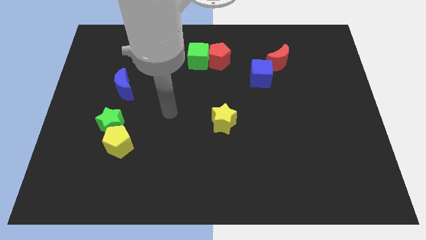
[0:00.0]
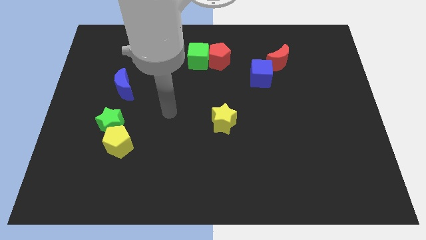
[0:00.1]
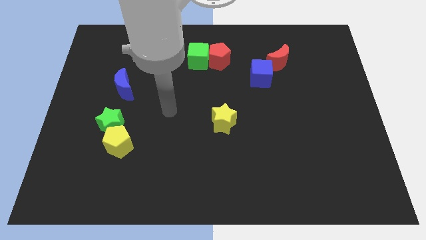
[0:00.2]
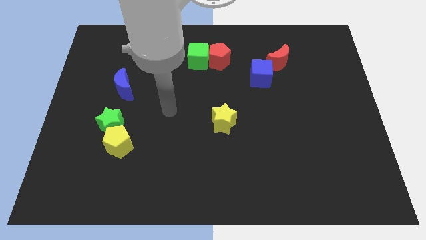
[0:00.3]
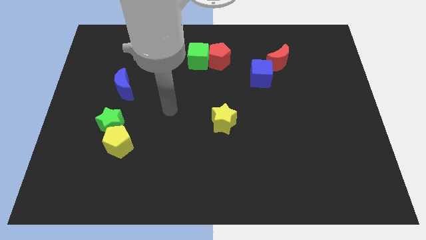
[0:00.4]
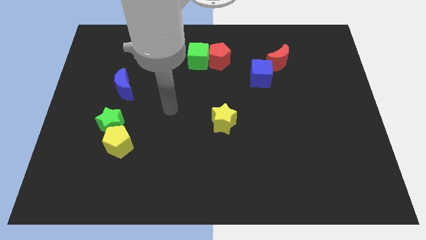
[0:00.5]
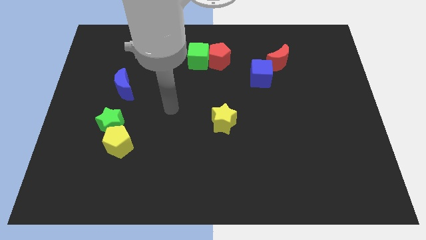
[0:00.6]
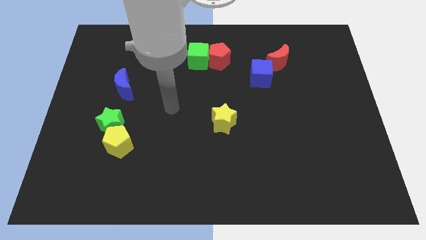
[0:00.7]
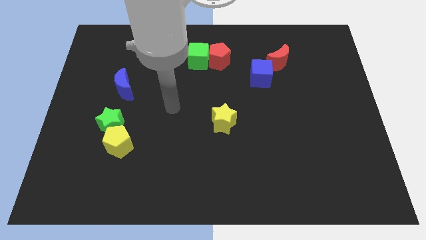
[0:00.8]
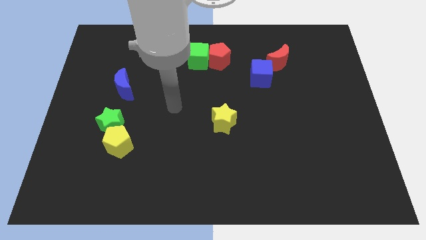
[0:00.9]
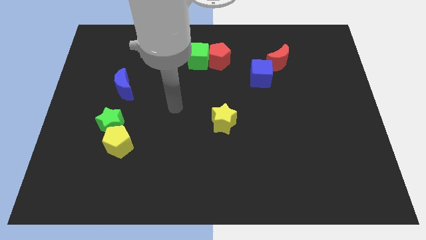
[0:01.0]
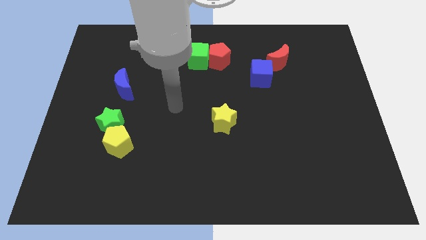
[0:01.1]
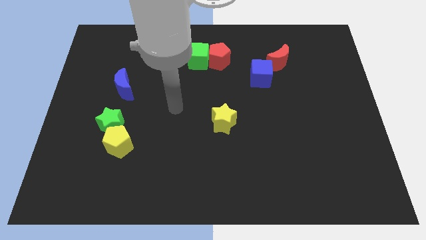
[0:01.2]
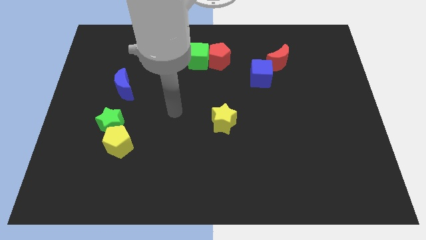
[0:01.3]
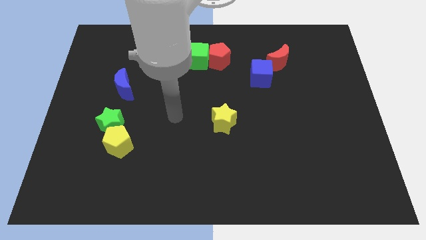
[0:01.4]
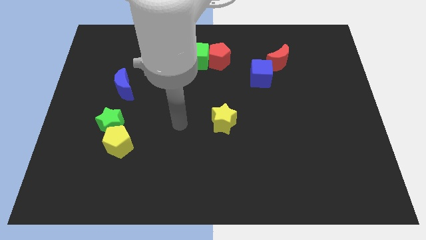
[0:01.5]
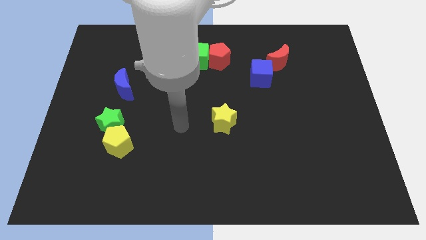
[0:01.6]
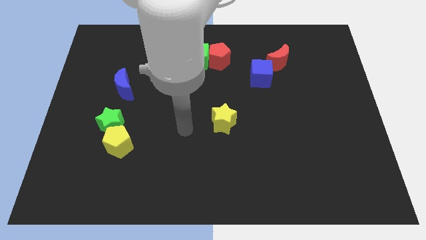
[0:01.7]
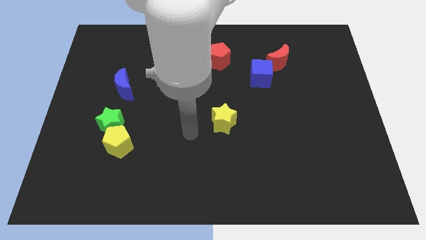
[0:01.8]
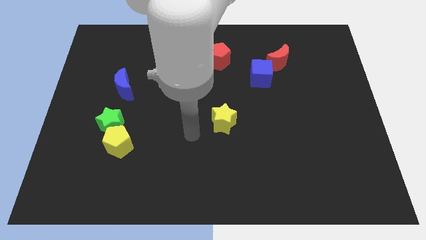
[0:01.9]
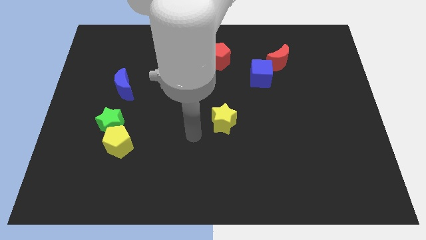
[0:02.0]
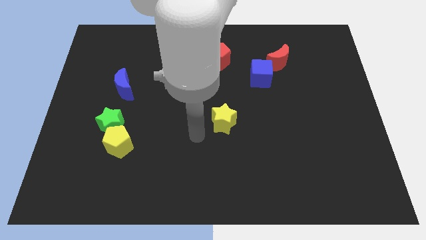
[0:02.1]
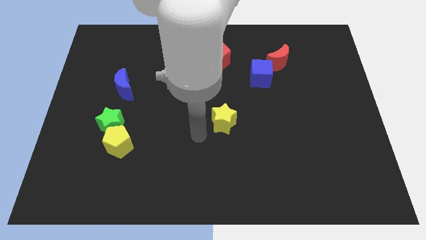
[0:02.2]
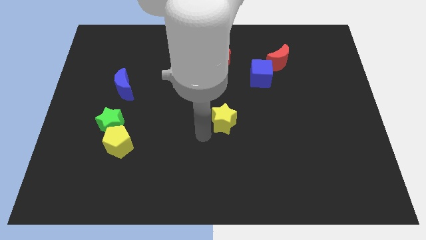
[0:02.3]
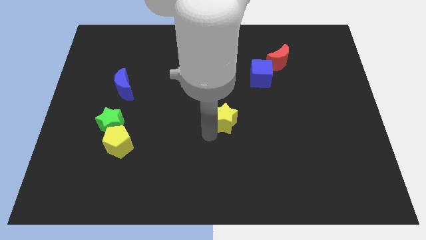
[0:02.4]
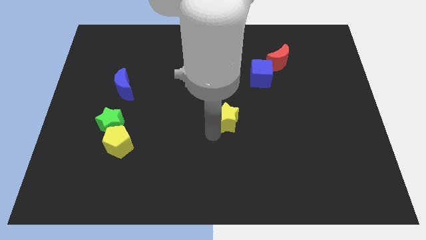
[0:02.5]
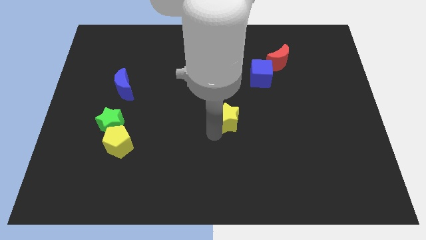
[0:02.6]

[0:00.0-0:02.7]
place your arm at the bottom of the yellow star

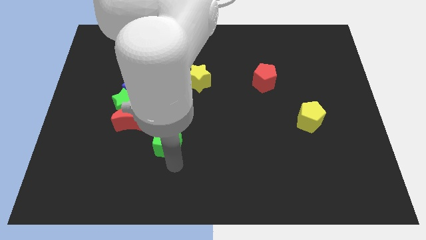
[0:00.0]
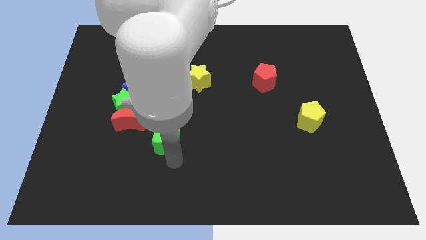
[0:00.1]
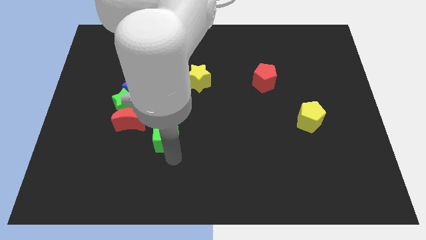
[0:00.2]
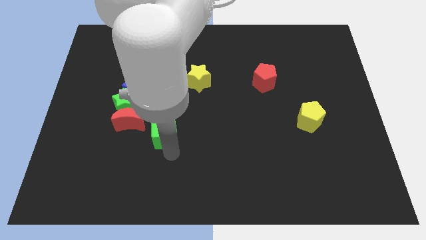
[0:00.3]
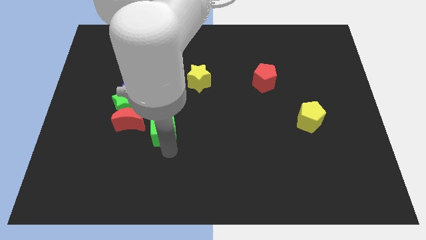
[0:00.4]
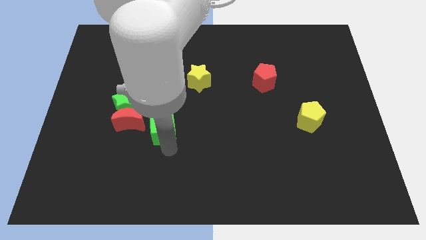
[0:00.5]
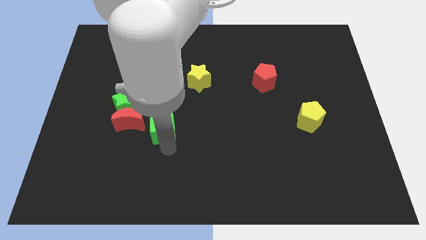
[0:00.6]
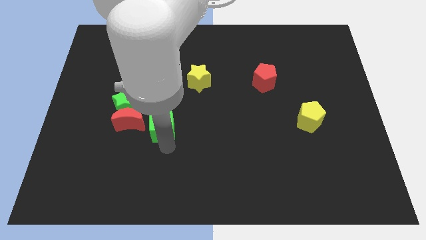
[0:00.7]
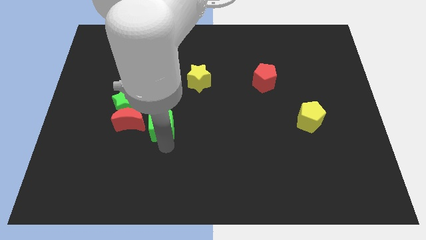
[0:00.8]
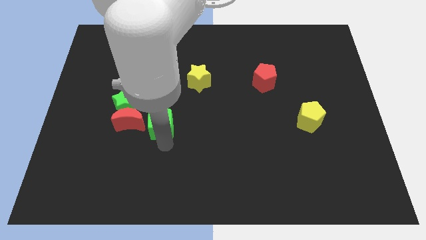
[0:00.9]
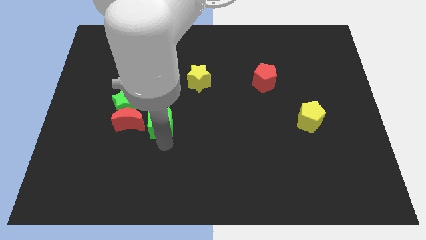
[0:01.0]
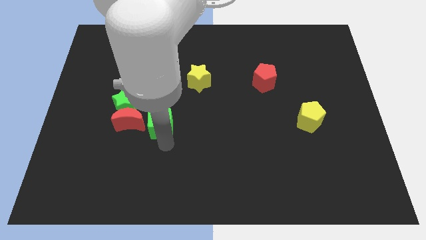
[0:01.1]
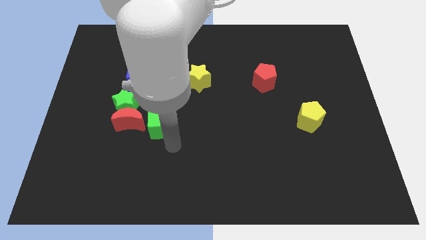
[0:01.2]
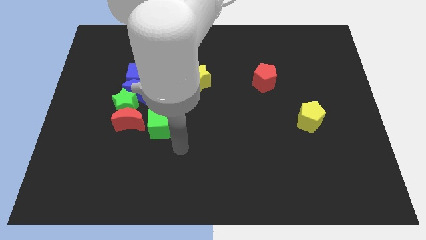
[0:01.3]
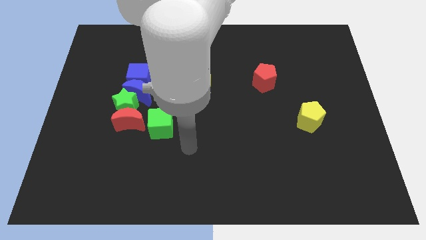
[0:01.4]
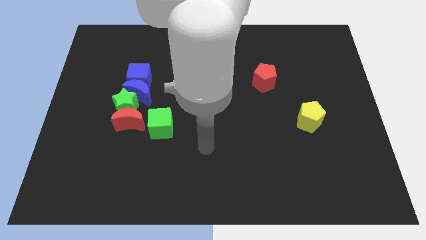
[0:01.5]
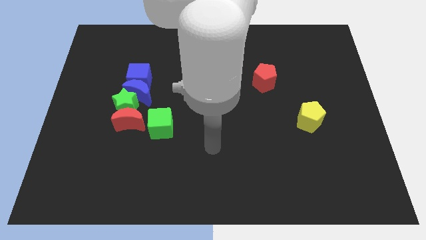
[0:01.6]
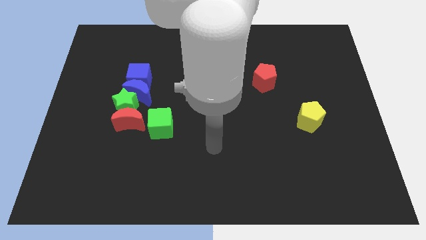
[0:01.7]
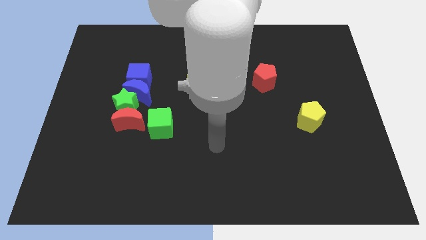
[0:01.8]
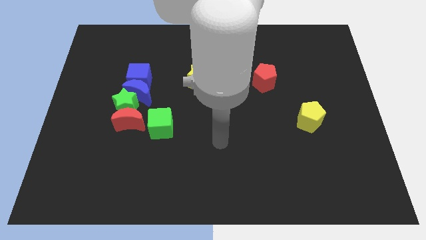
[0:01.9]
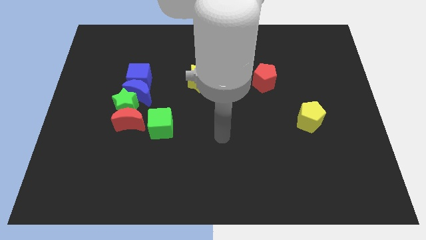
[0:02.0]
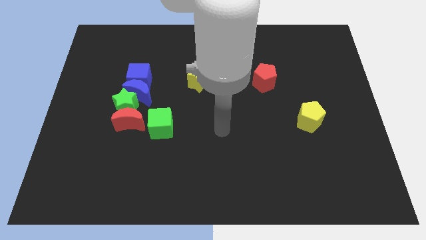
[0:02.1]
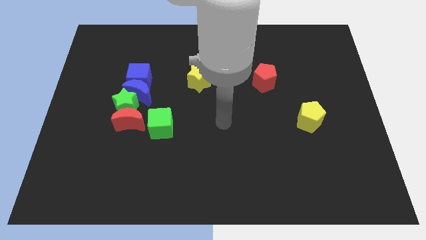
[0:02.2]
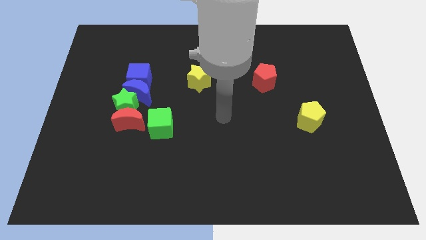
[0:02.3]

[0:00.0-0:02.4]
push green star right to red moon

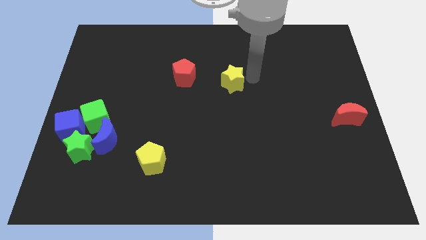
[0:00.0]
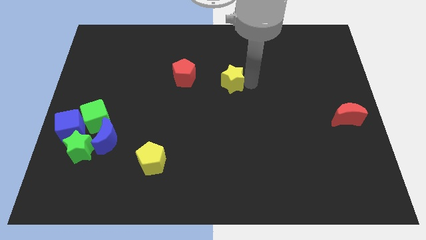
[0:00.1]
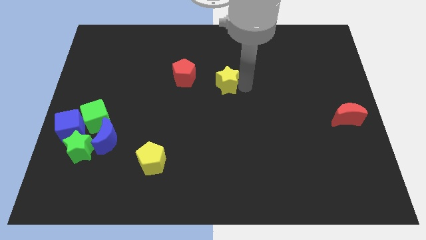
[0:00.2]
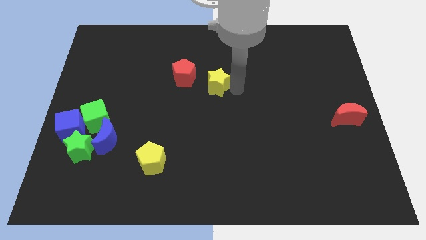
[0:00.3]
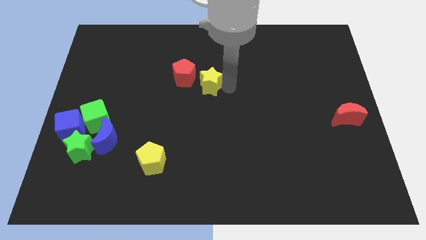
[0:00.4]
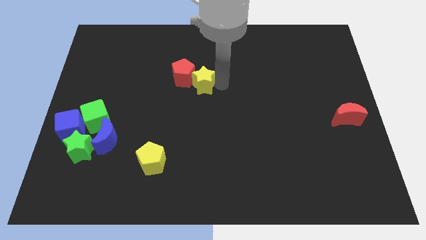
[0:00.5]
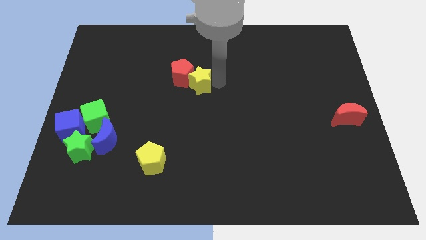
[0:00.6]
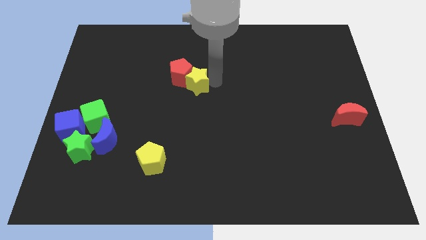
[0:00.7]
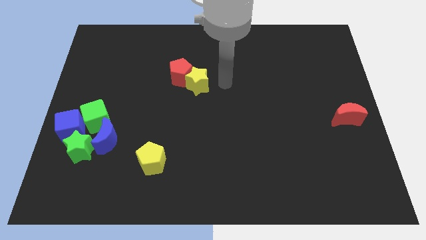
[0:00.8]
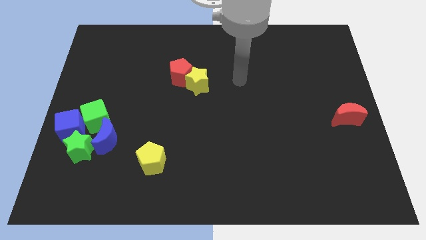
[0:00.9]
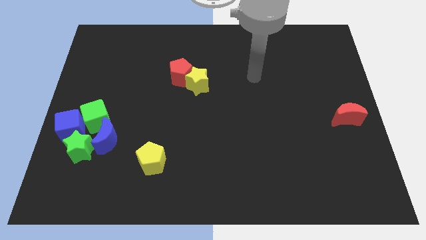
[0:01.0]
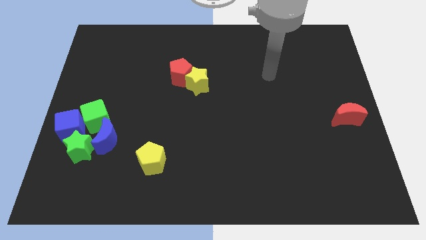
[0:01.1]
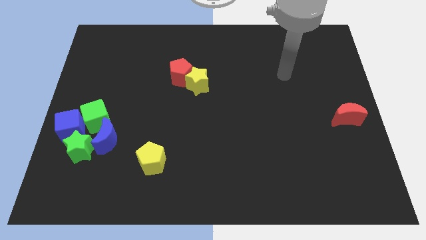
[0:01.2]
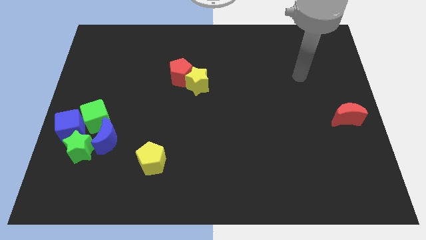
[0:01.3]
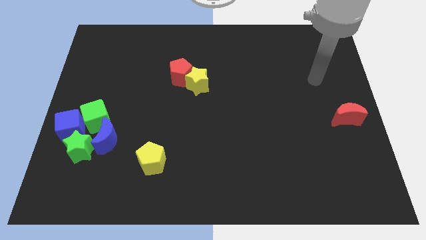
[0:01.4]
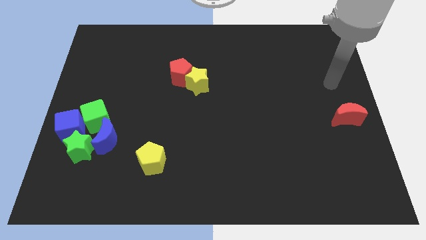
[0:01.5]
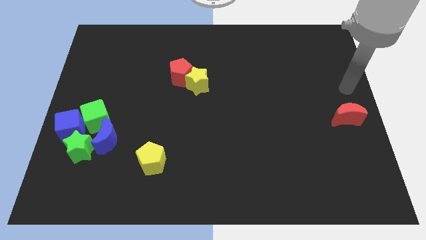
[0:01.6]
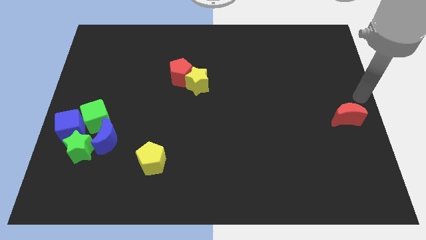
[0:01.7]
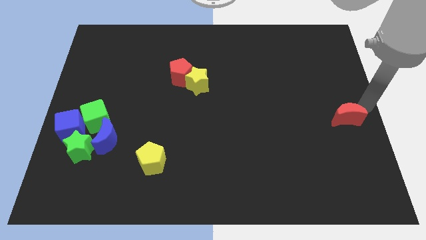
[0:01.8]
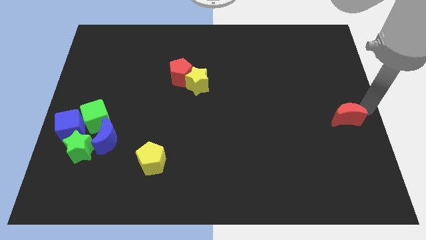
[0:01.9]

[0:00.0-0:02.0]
place yellow star into the red pentagon

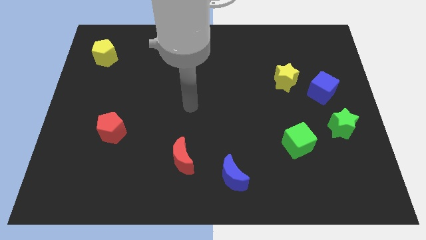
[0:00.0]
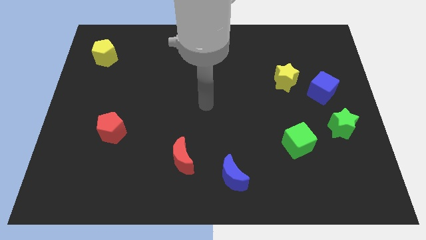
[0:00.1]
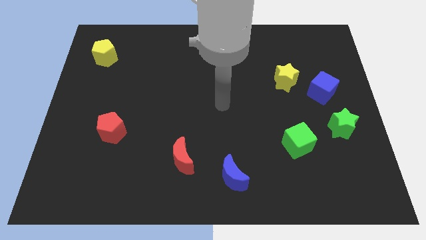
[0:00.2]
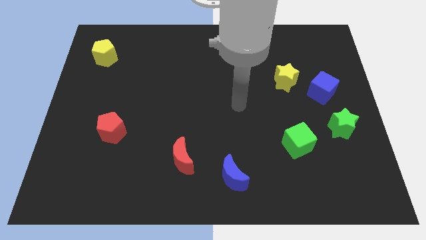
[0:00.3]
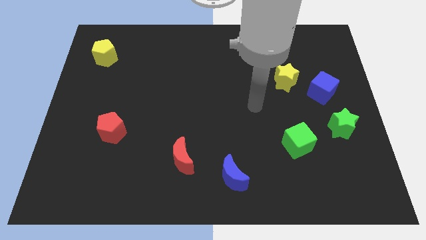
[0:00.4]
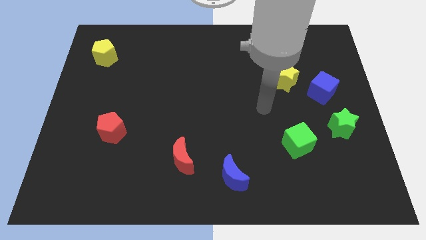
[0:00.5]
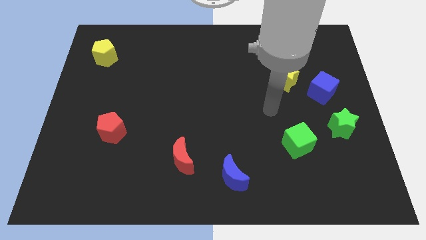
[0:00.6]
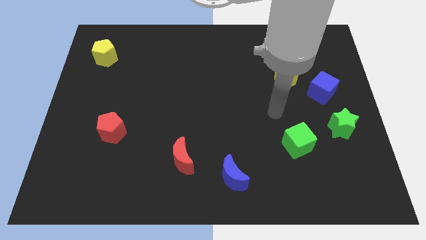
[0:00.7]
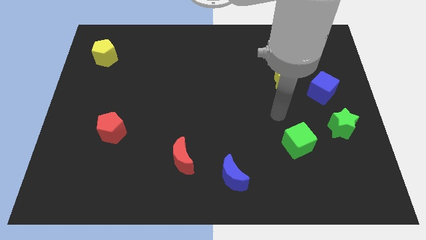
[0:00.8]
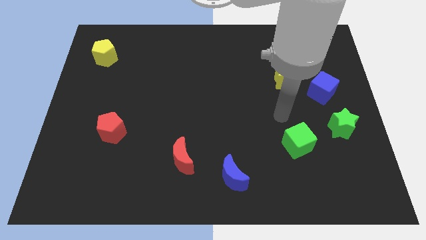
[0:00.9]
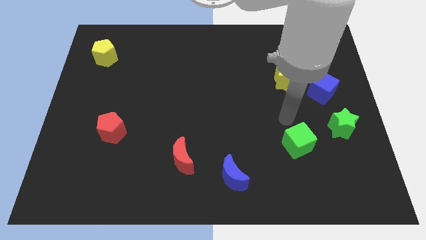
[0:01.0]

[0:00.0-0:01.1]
place your hand in between yellow star and green cube

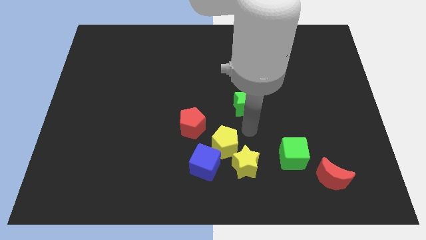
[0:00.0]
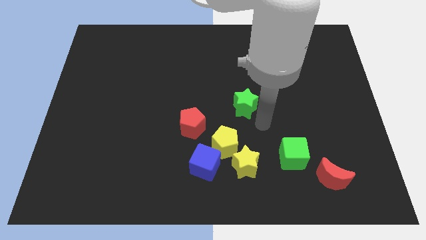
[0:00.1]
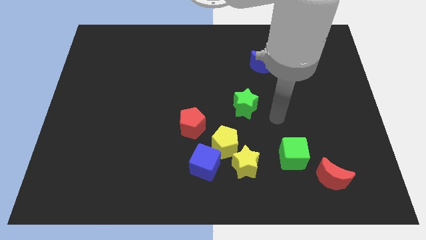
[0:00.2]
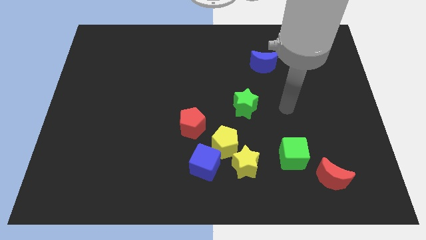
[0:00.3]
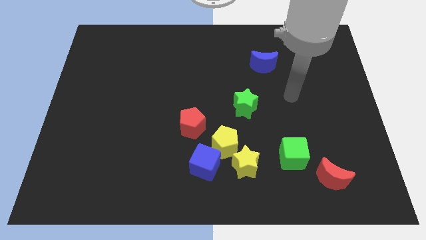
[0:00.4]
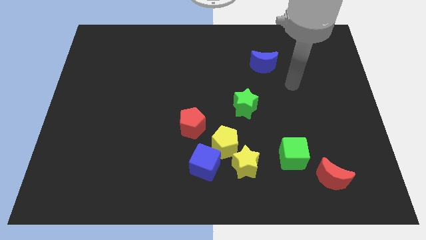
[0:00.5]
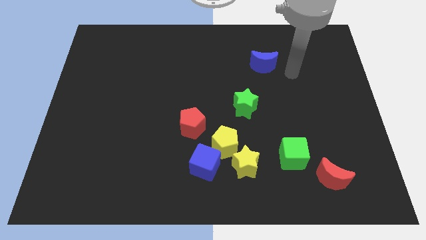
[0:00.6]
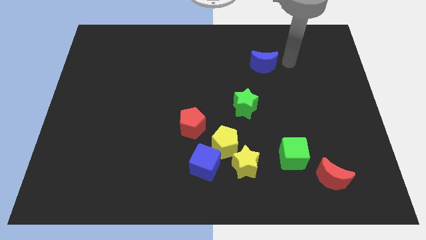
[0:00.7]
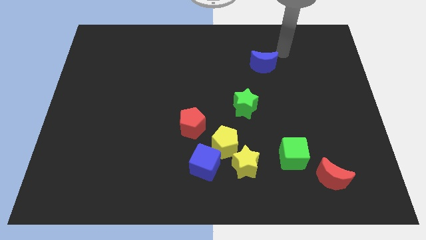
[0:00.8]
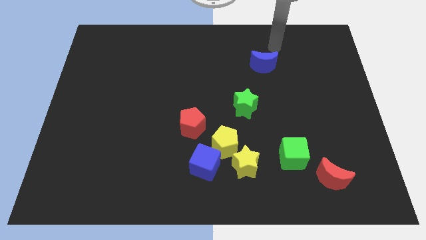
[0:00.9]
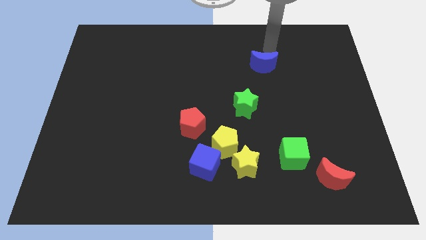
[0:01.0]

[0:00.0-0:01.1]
place the arm at the top of the blue moon
